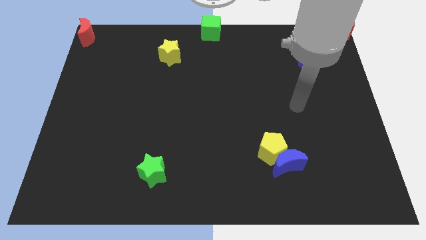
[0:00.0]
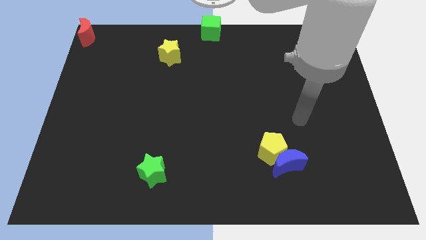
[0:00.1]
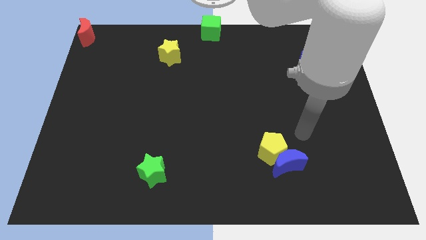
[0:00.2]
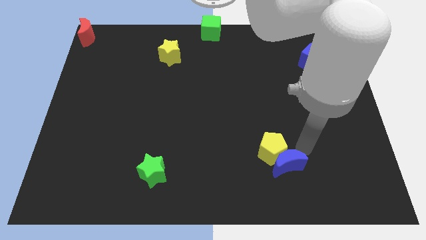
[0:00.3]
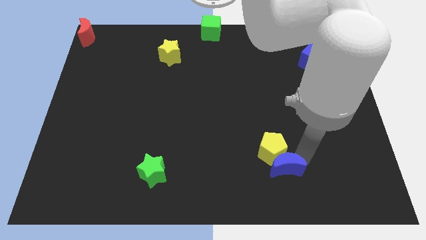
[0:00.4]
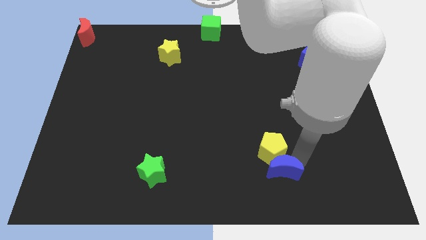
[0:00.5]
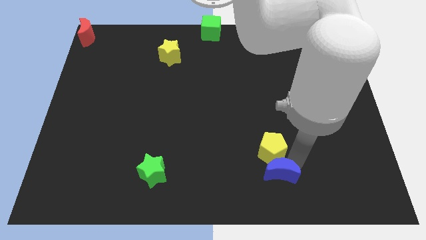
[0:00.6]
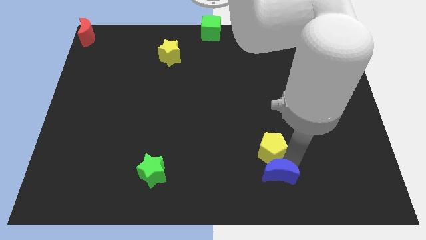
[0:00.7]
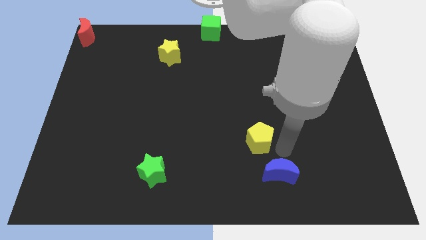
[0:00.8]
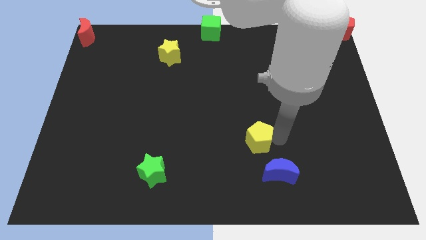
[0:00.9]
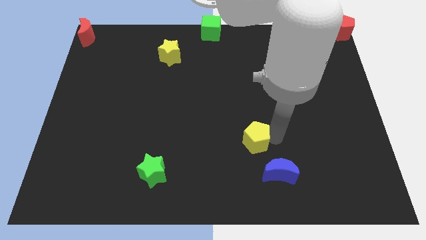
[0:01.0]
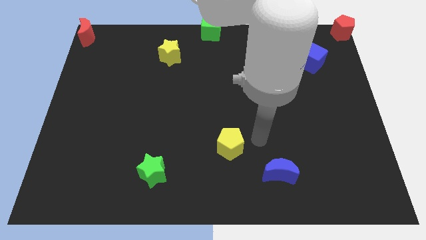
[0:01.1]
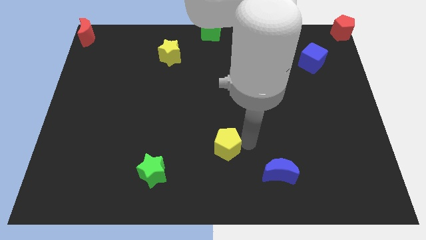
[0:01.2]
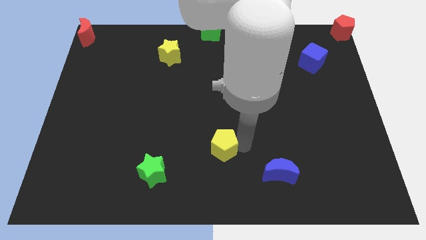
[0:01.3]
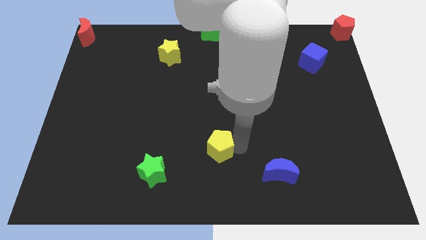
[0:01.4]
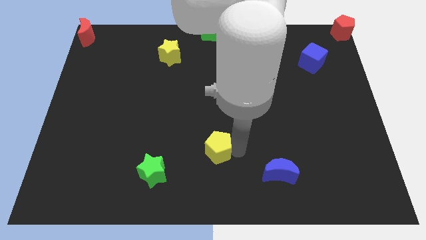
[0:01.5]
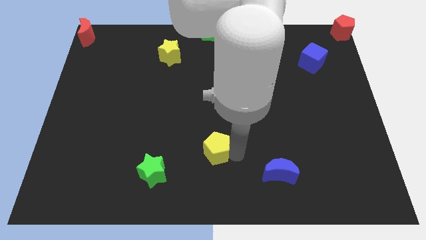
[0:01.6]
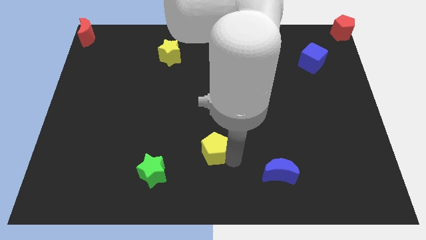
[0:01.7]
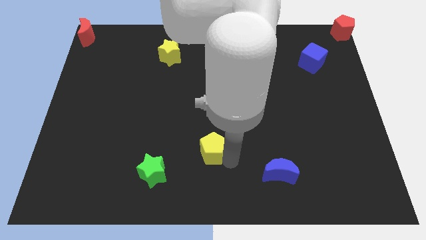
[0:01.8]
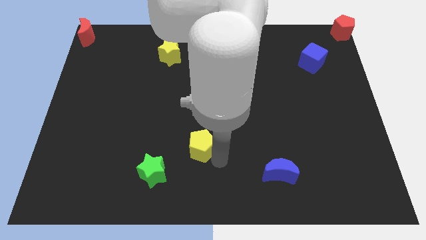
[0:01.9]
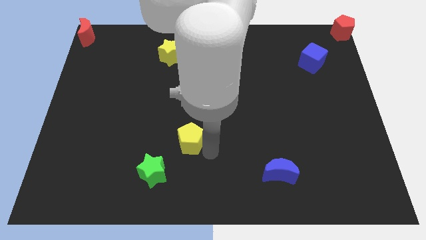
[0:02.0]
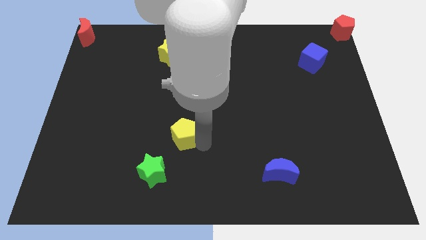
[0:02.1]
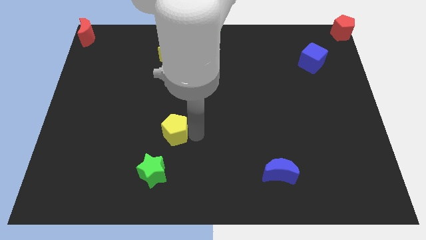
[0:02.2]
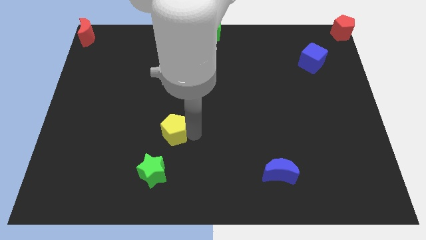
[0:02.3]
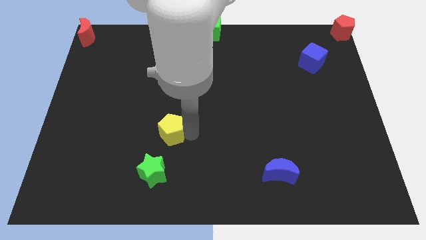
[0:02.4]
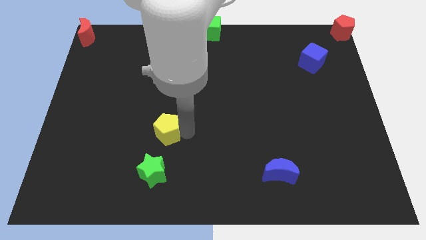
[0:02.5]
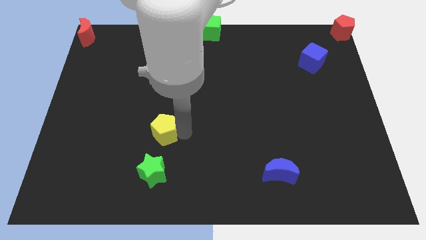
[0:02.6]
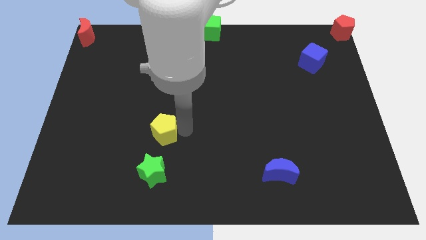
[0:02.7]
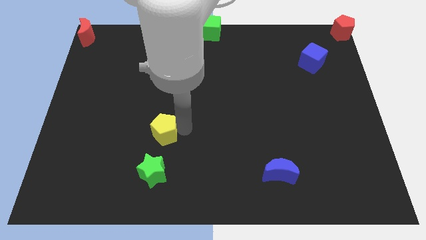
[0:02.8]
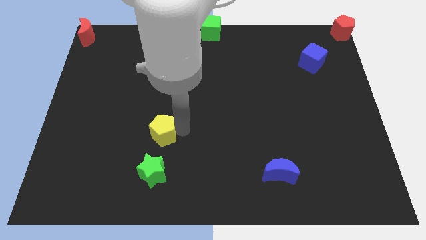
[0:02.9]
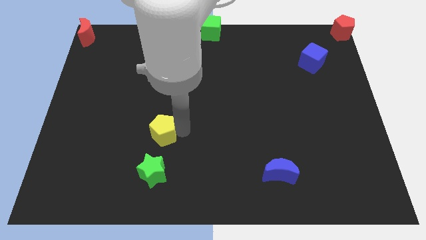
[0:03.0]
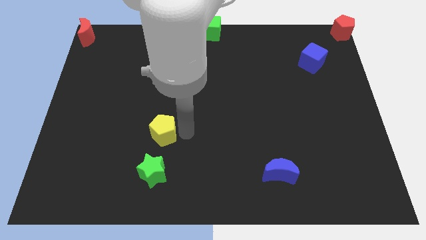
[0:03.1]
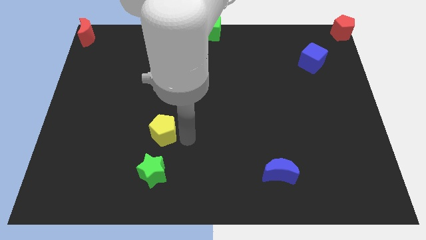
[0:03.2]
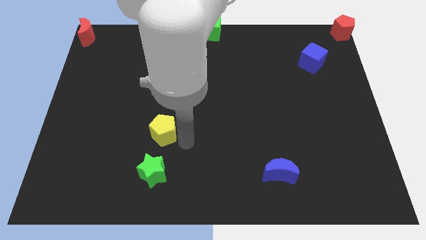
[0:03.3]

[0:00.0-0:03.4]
move the yellow pentagon to top of the green star

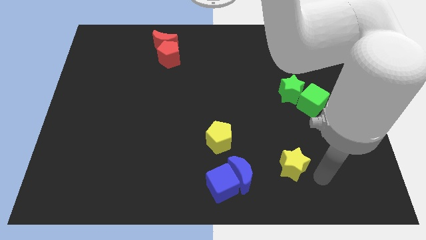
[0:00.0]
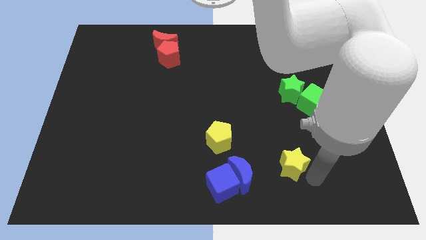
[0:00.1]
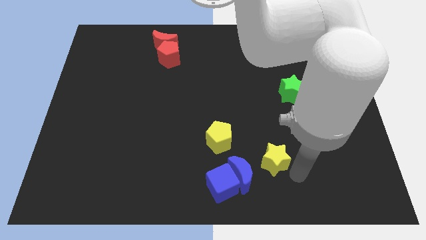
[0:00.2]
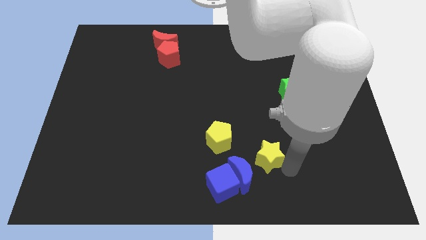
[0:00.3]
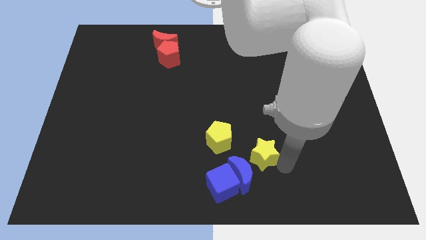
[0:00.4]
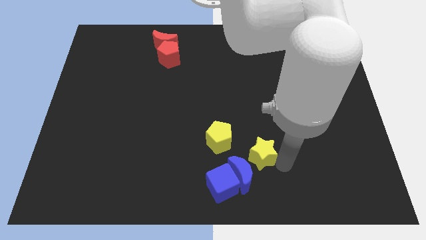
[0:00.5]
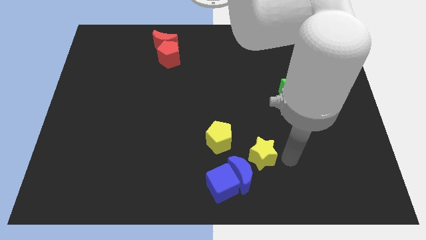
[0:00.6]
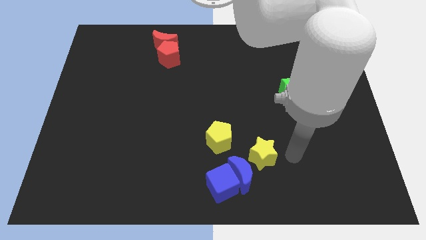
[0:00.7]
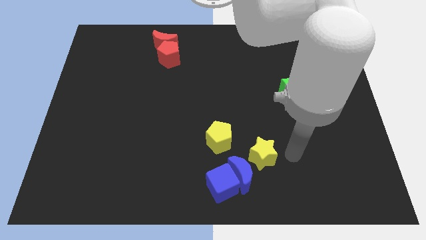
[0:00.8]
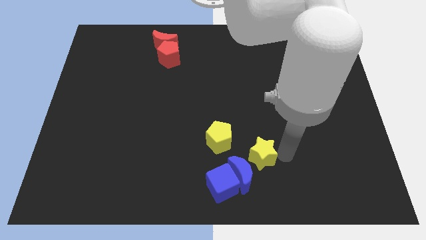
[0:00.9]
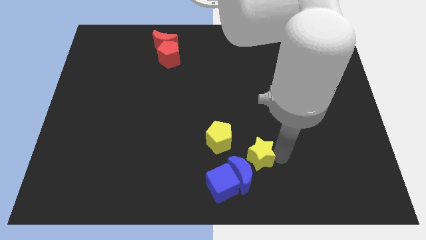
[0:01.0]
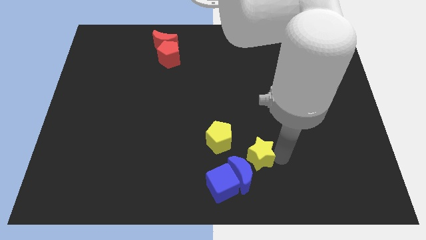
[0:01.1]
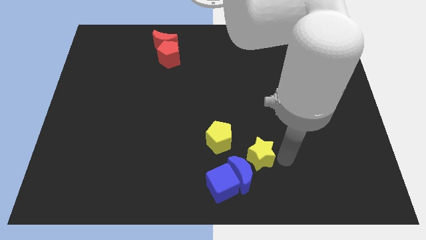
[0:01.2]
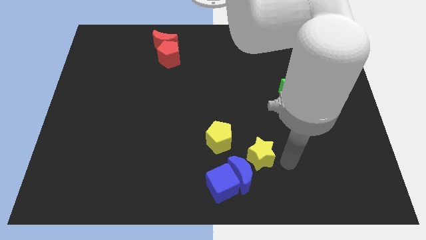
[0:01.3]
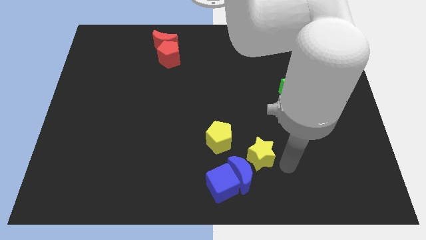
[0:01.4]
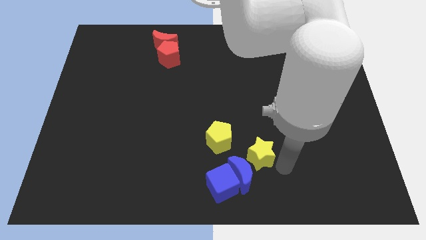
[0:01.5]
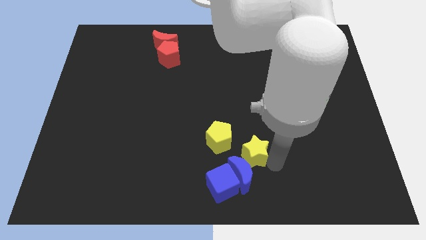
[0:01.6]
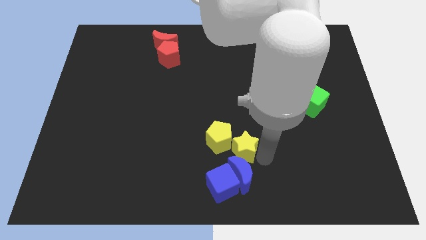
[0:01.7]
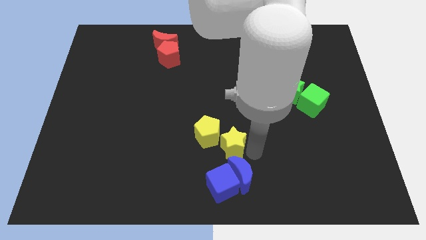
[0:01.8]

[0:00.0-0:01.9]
put the yellow star into the yellow pentagon

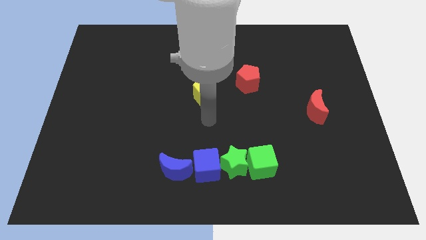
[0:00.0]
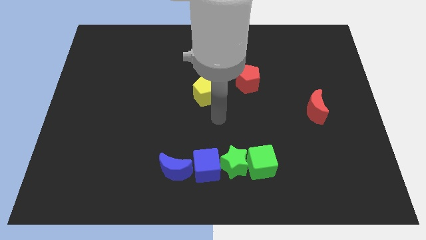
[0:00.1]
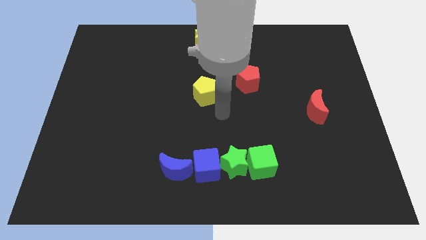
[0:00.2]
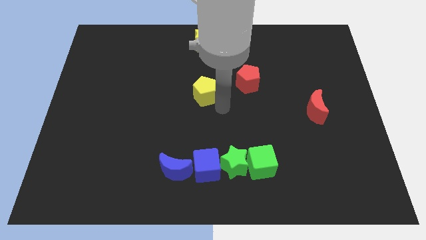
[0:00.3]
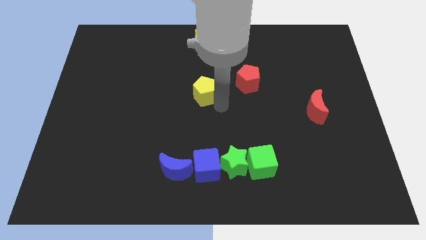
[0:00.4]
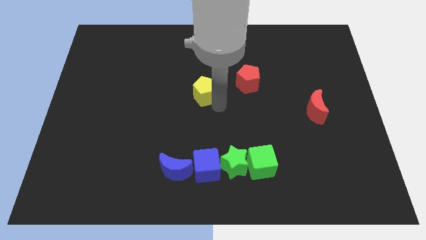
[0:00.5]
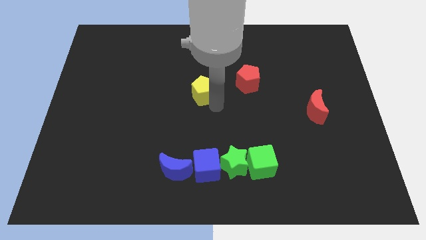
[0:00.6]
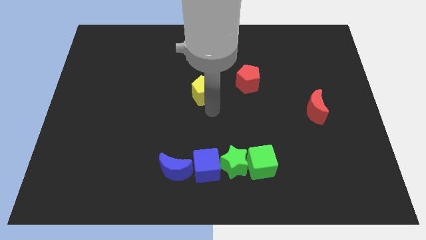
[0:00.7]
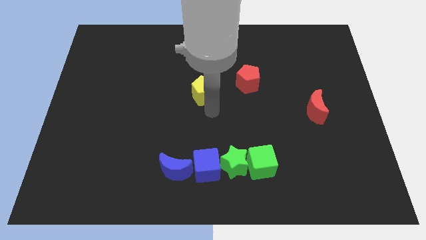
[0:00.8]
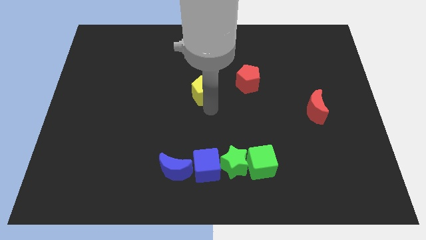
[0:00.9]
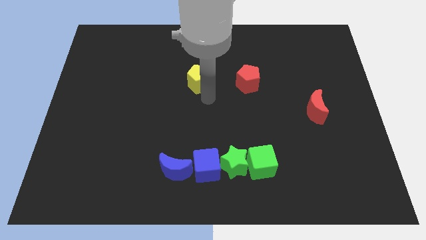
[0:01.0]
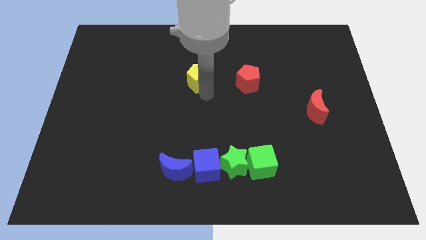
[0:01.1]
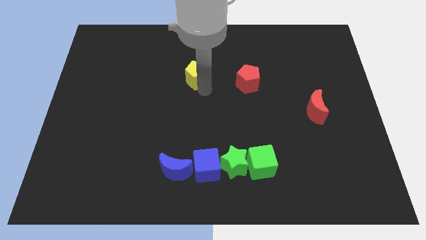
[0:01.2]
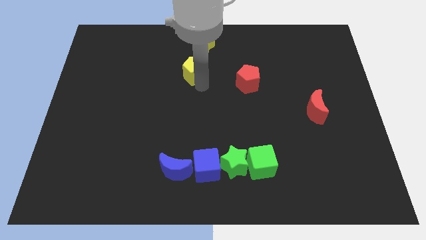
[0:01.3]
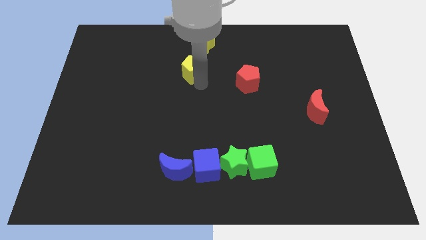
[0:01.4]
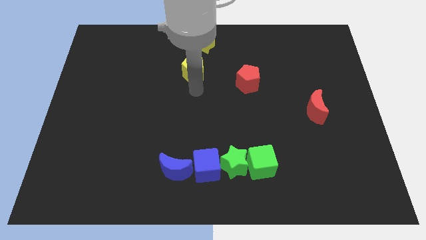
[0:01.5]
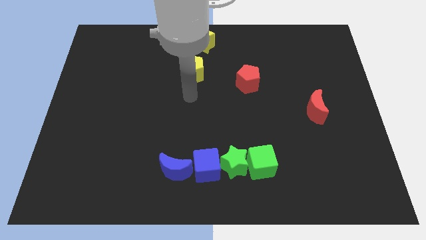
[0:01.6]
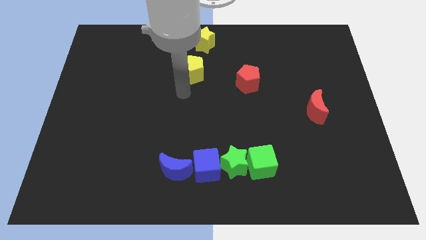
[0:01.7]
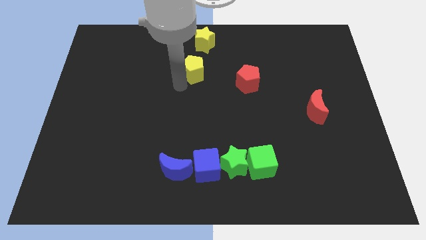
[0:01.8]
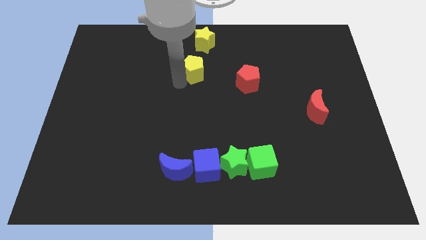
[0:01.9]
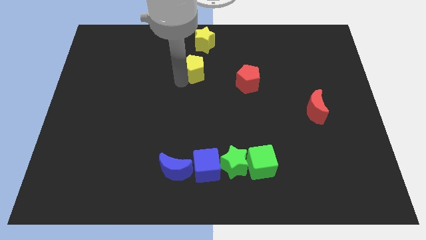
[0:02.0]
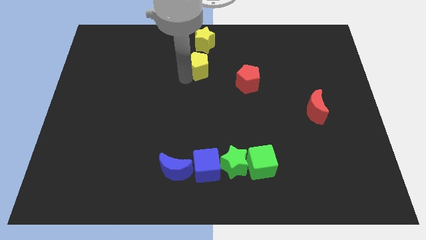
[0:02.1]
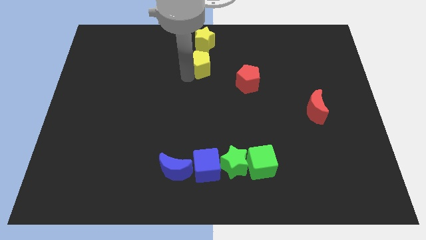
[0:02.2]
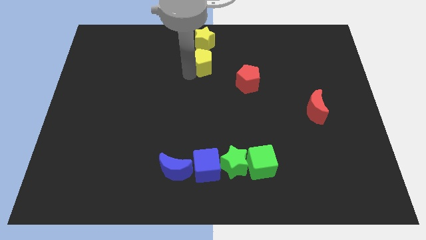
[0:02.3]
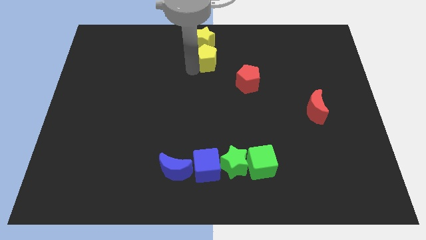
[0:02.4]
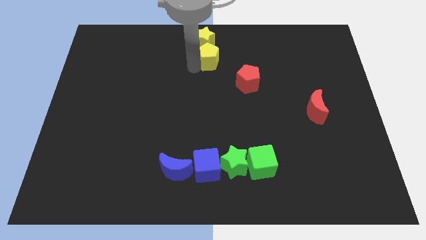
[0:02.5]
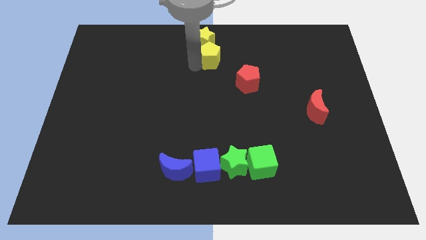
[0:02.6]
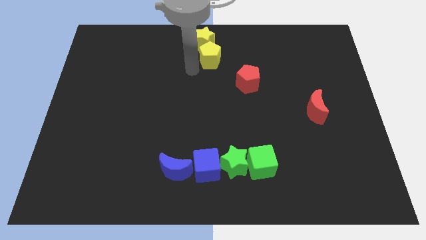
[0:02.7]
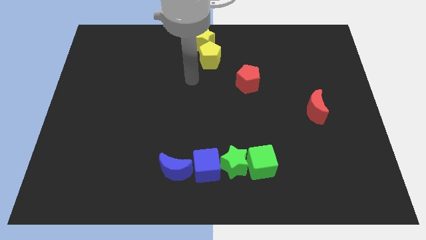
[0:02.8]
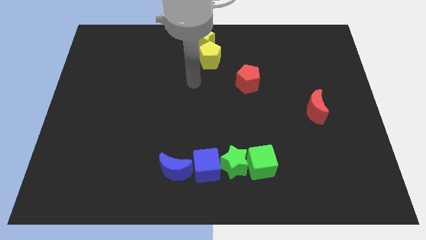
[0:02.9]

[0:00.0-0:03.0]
move the yellow pentagon into the bottom side of the yellow star

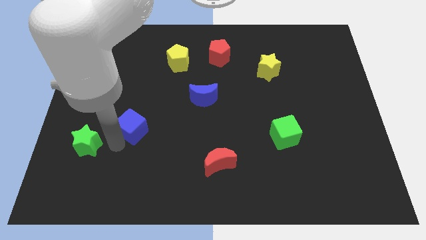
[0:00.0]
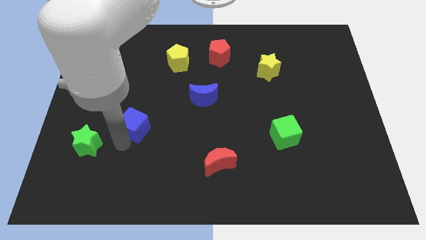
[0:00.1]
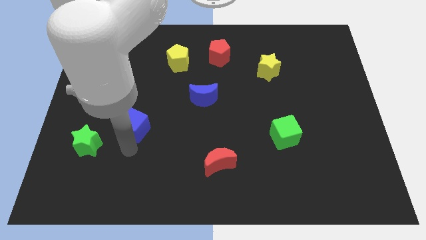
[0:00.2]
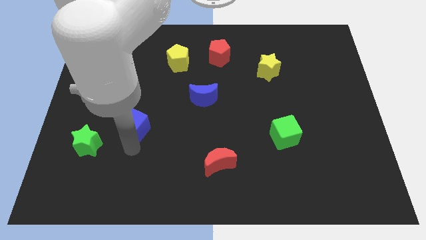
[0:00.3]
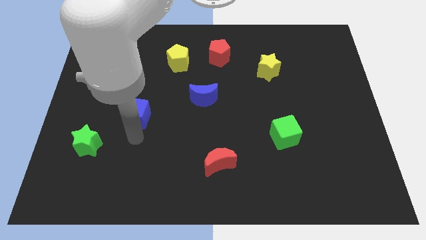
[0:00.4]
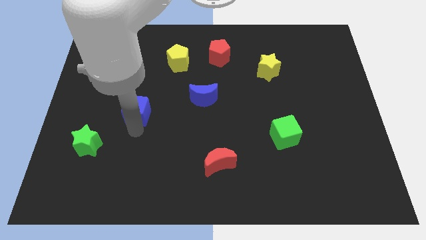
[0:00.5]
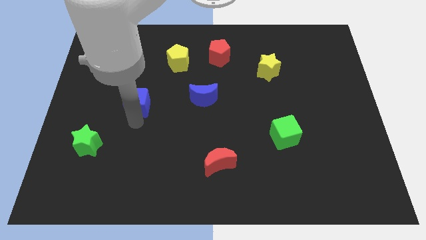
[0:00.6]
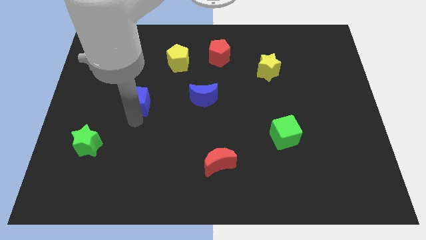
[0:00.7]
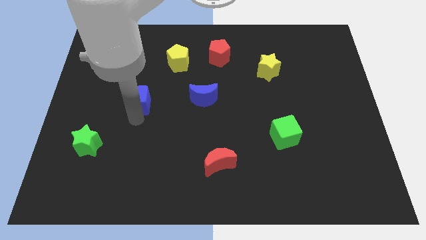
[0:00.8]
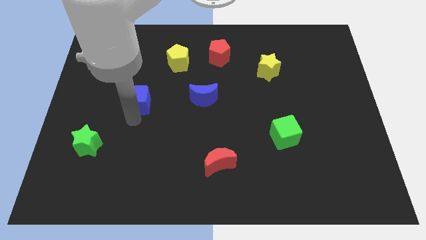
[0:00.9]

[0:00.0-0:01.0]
place the blue cube to the left of the blue crescent
